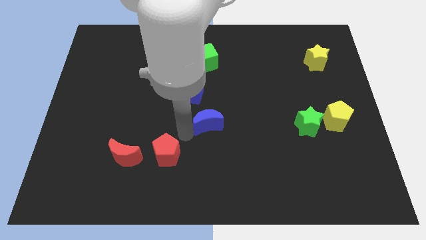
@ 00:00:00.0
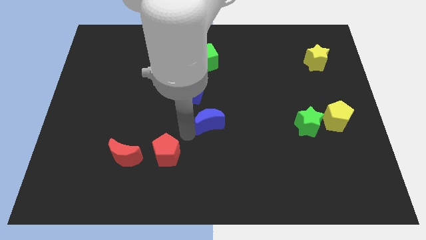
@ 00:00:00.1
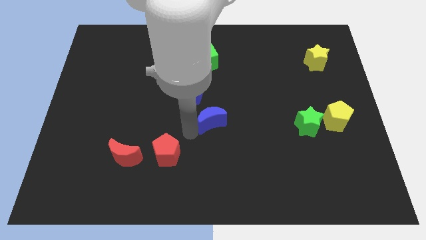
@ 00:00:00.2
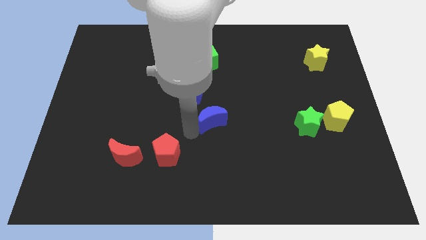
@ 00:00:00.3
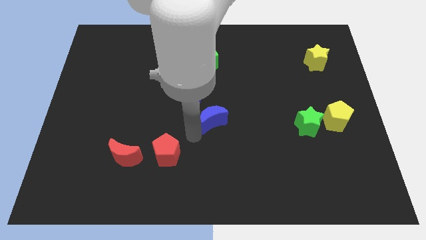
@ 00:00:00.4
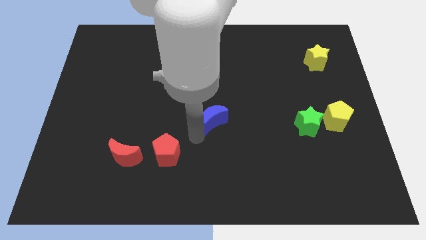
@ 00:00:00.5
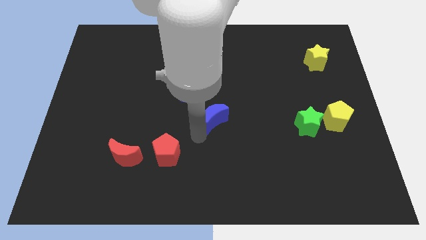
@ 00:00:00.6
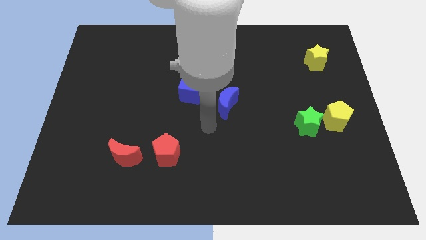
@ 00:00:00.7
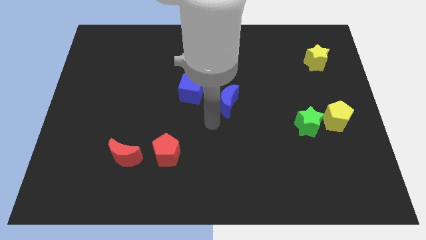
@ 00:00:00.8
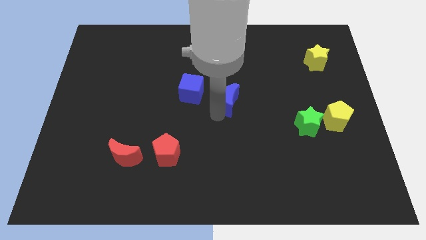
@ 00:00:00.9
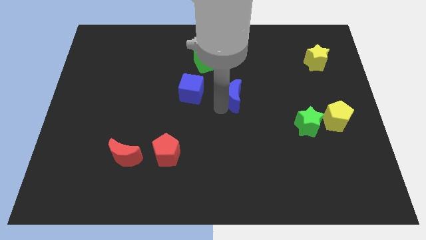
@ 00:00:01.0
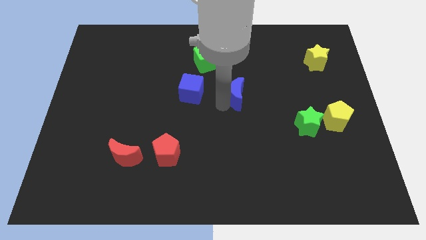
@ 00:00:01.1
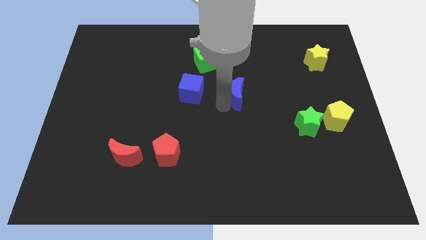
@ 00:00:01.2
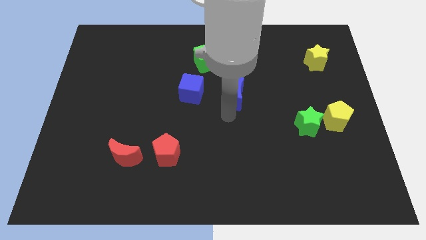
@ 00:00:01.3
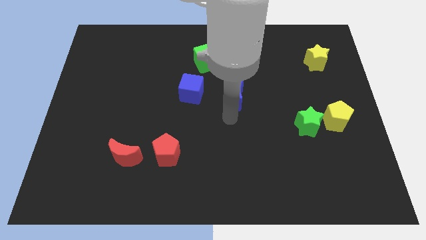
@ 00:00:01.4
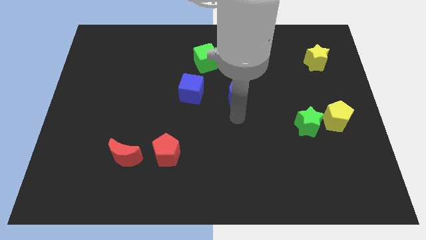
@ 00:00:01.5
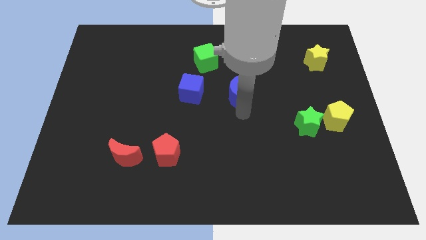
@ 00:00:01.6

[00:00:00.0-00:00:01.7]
move the blue moon right to the blue cube

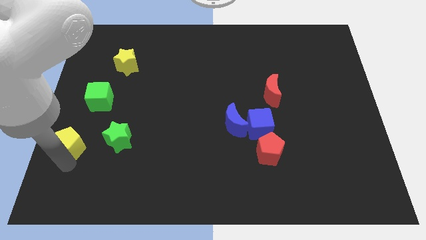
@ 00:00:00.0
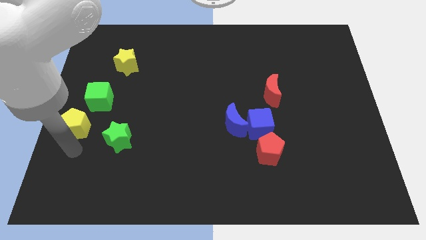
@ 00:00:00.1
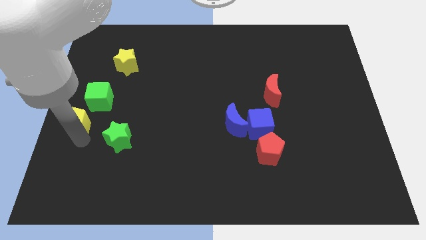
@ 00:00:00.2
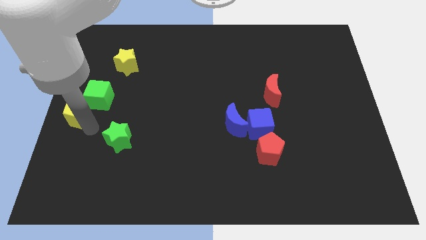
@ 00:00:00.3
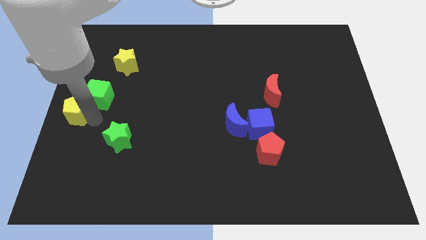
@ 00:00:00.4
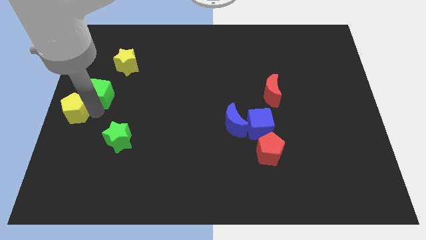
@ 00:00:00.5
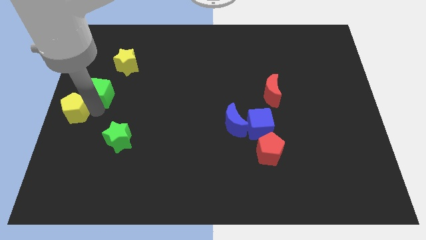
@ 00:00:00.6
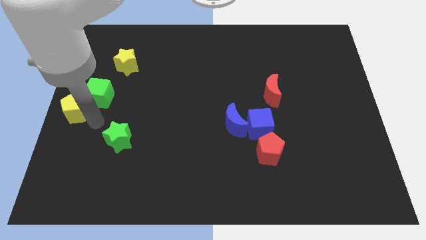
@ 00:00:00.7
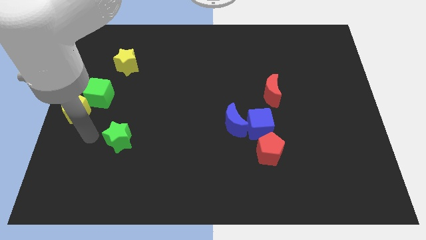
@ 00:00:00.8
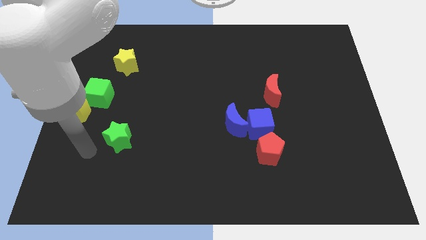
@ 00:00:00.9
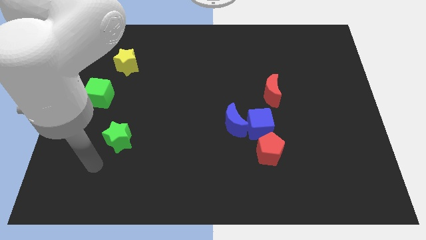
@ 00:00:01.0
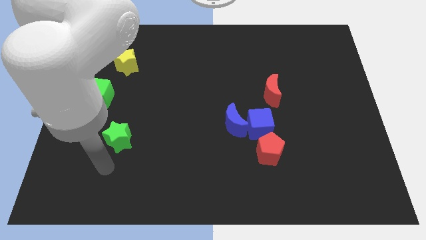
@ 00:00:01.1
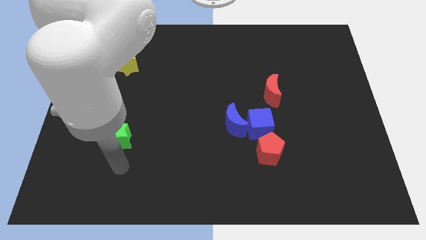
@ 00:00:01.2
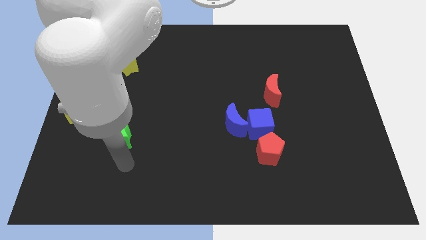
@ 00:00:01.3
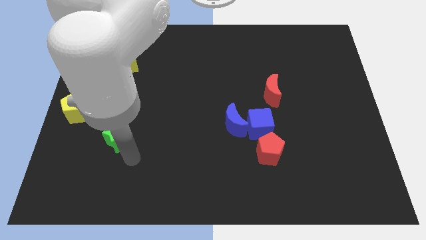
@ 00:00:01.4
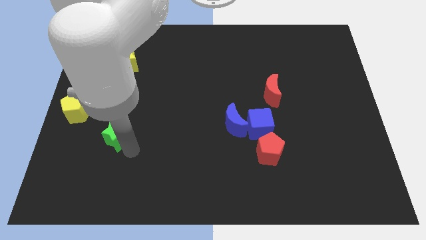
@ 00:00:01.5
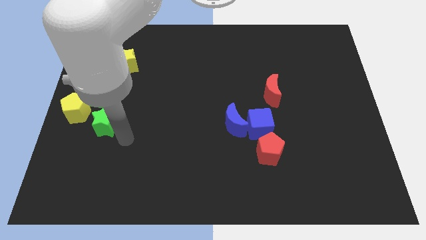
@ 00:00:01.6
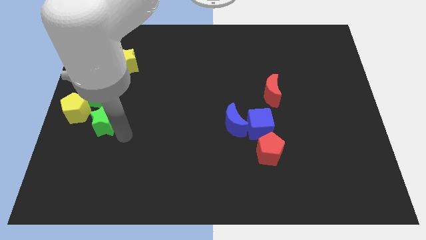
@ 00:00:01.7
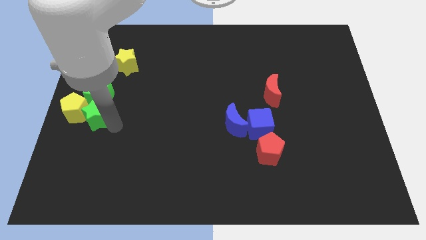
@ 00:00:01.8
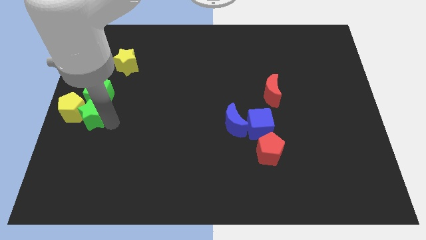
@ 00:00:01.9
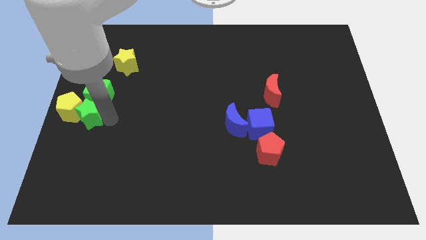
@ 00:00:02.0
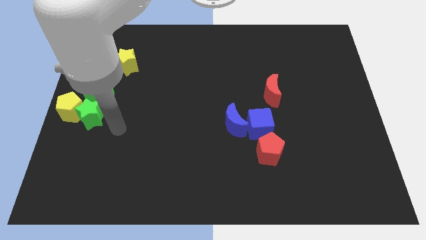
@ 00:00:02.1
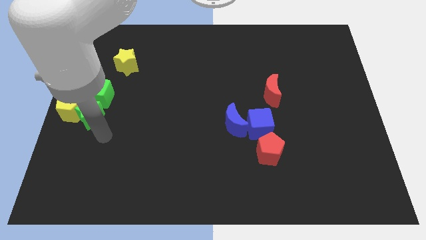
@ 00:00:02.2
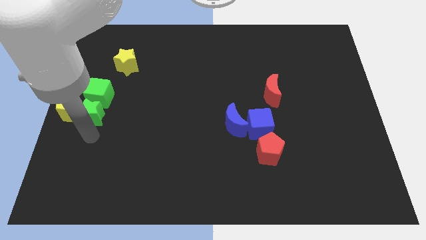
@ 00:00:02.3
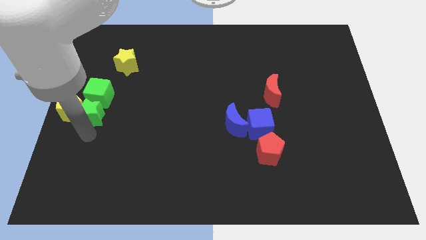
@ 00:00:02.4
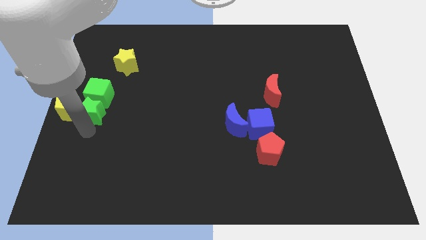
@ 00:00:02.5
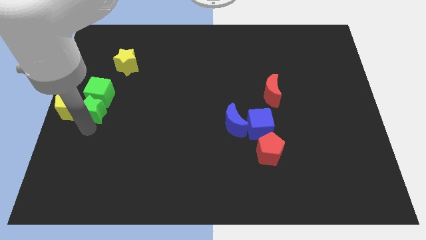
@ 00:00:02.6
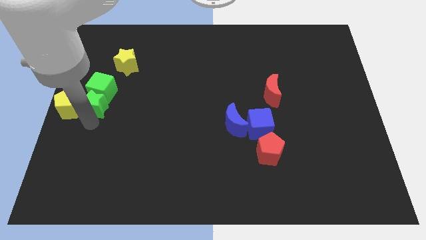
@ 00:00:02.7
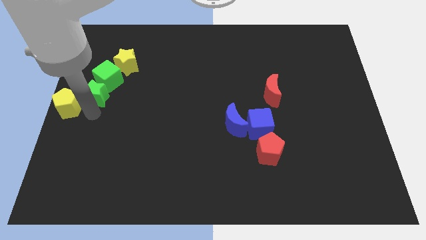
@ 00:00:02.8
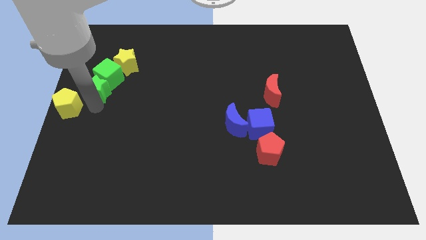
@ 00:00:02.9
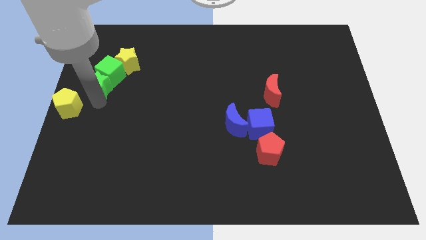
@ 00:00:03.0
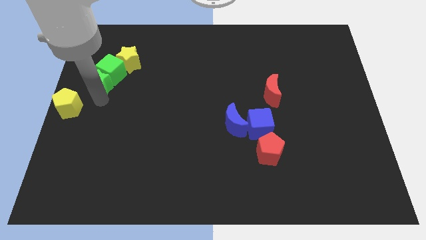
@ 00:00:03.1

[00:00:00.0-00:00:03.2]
push green blocks and yellow pentagon to form a line

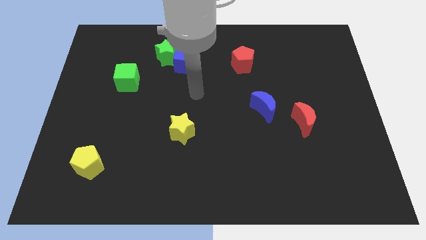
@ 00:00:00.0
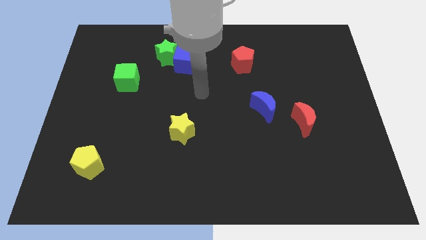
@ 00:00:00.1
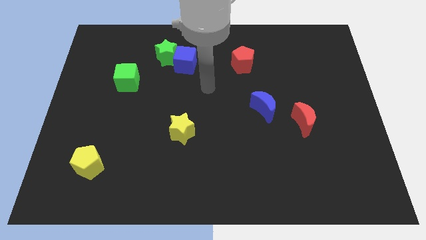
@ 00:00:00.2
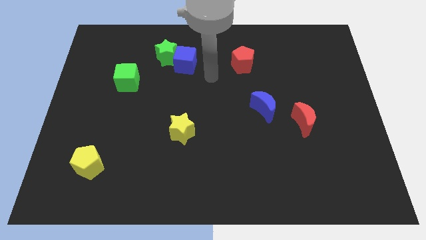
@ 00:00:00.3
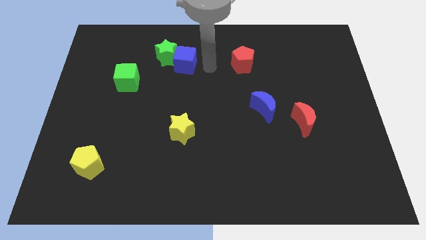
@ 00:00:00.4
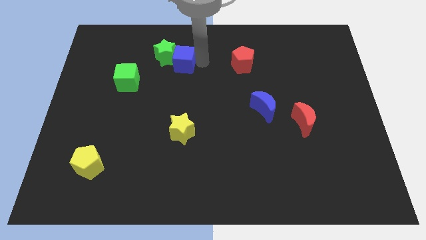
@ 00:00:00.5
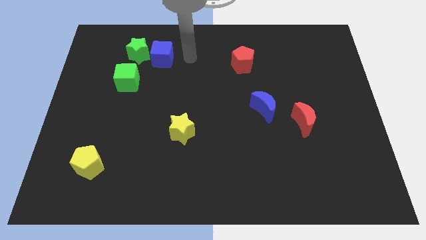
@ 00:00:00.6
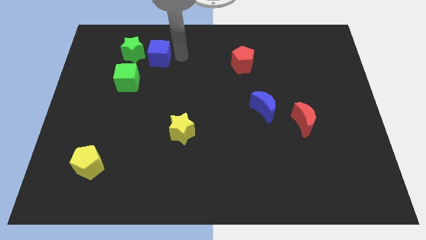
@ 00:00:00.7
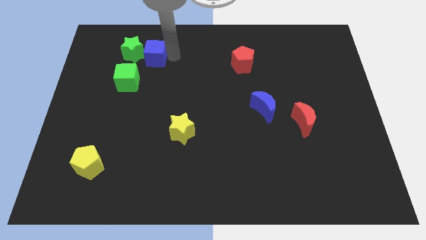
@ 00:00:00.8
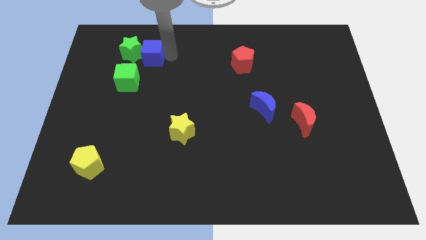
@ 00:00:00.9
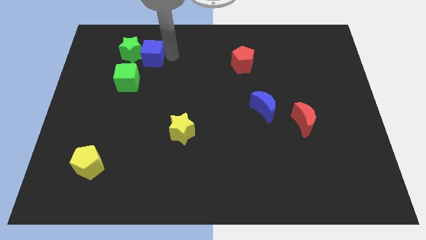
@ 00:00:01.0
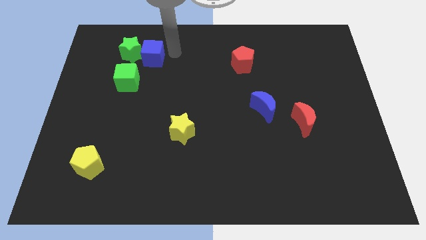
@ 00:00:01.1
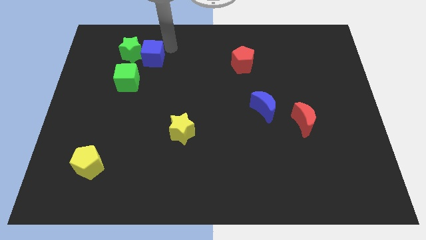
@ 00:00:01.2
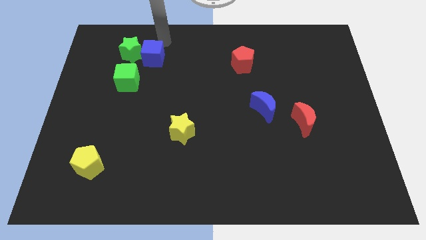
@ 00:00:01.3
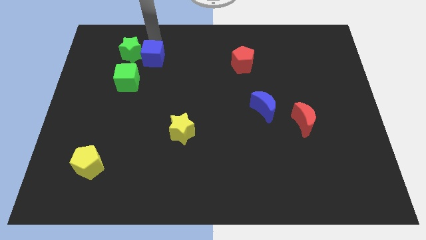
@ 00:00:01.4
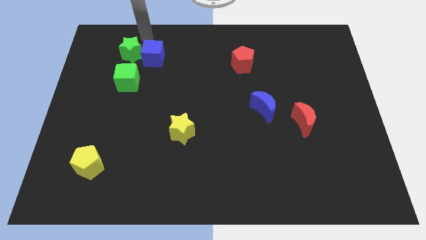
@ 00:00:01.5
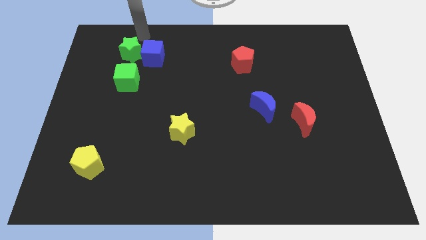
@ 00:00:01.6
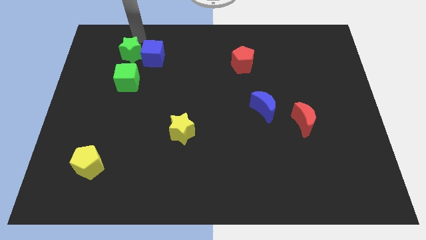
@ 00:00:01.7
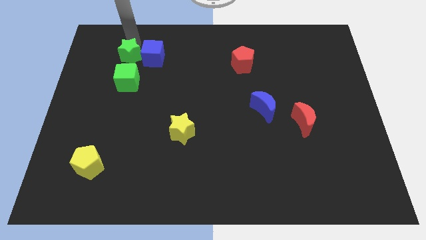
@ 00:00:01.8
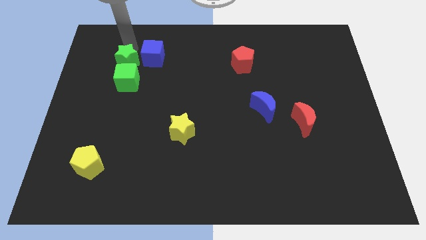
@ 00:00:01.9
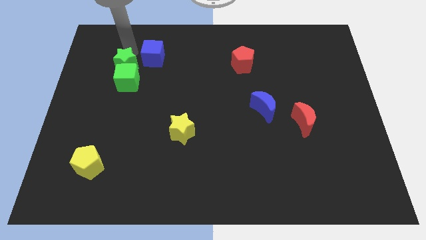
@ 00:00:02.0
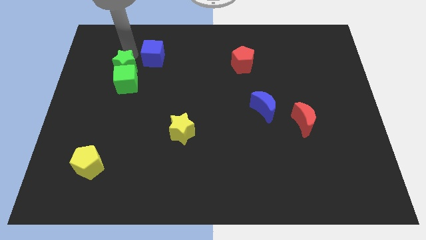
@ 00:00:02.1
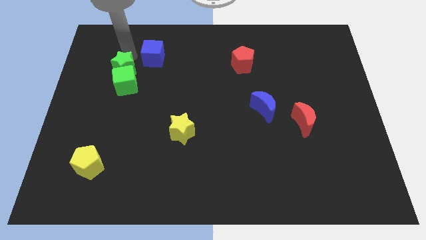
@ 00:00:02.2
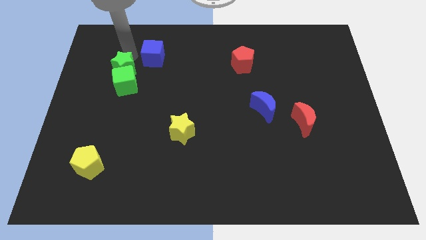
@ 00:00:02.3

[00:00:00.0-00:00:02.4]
move the green star above the green cube

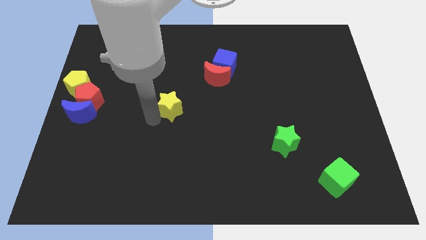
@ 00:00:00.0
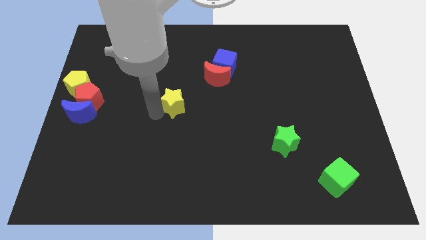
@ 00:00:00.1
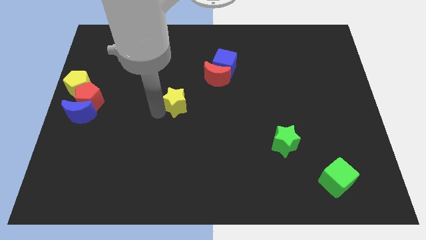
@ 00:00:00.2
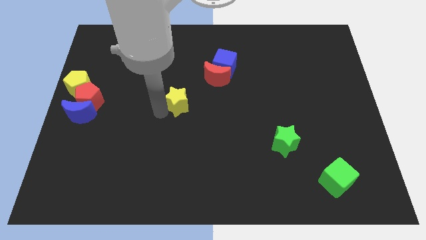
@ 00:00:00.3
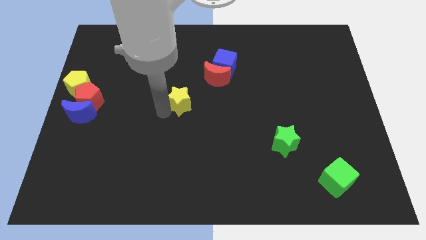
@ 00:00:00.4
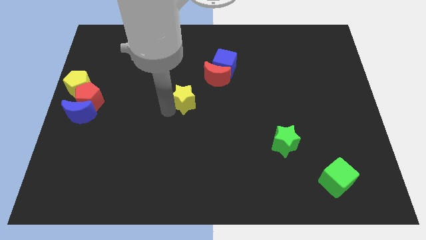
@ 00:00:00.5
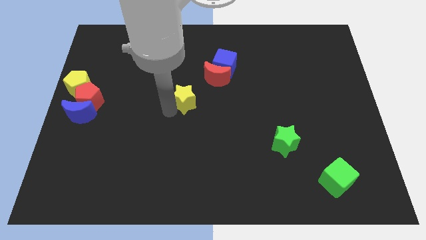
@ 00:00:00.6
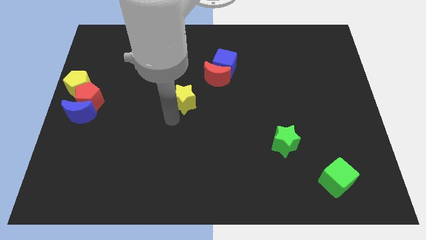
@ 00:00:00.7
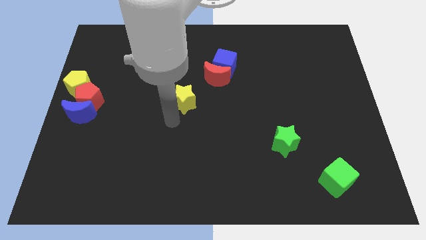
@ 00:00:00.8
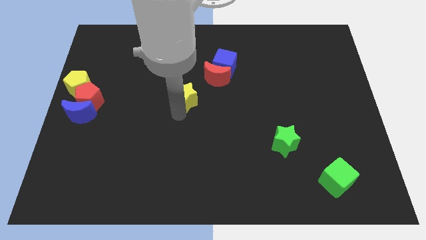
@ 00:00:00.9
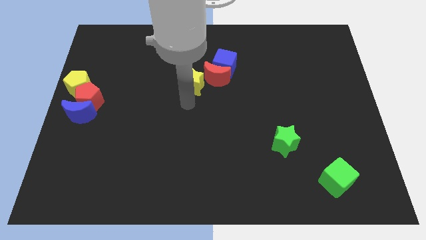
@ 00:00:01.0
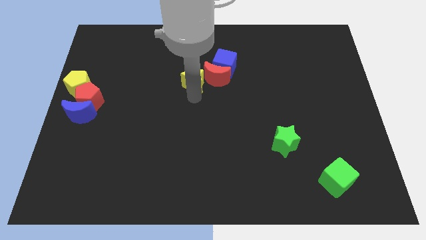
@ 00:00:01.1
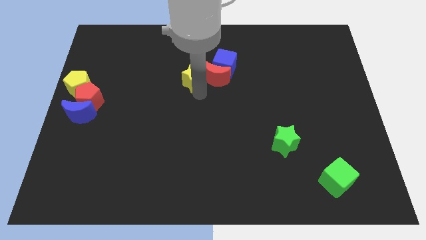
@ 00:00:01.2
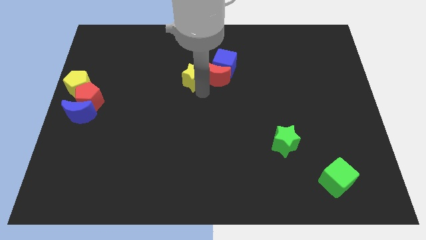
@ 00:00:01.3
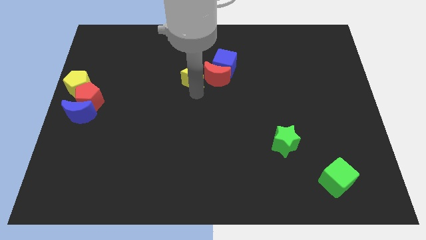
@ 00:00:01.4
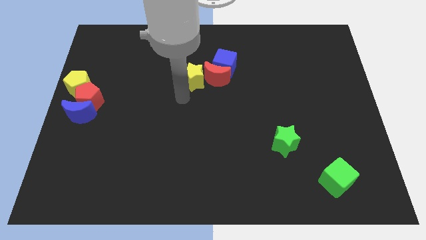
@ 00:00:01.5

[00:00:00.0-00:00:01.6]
push the yellow star into the red moon
